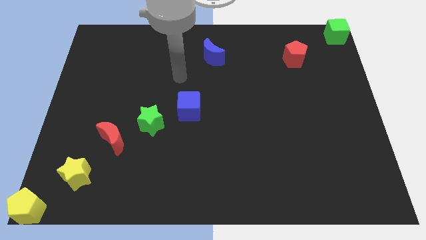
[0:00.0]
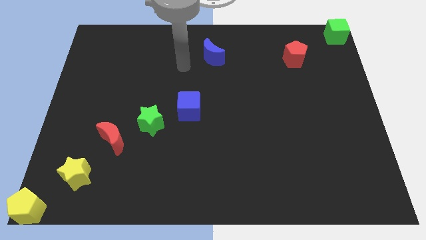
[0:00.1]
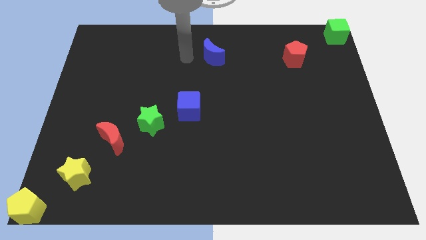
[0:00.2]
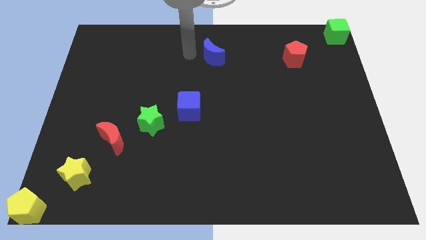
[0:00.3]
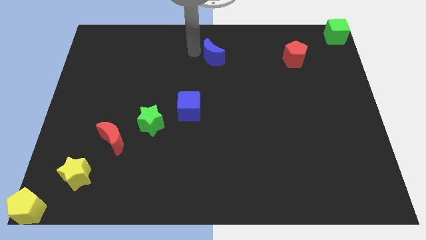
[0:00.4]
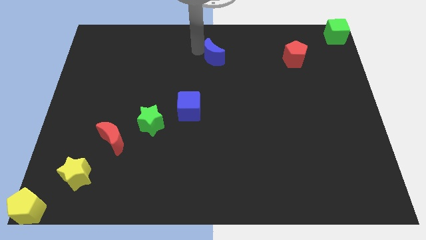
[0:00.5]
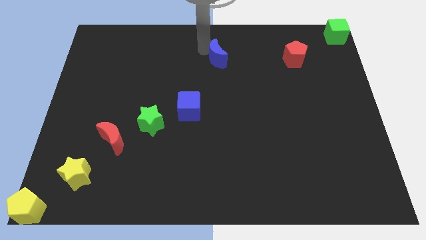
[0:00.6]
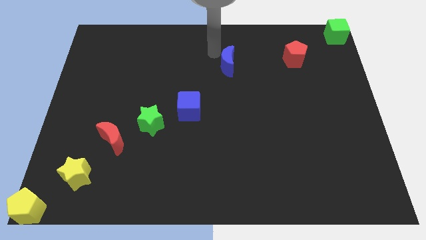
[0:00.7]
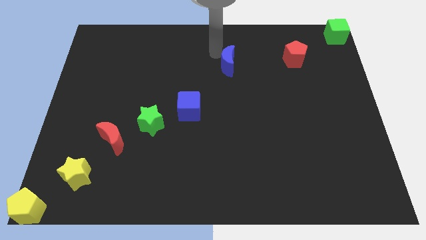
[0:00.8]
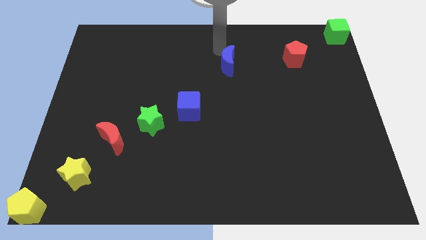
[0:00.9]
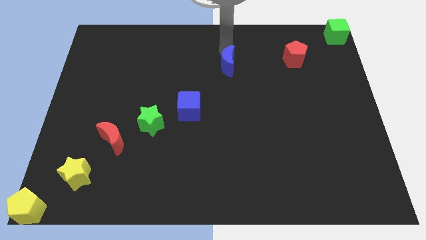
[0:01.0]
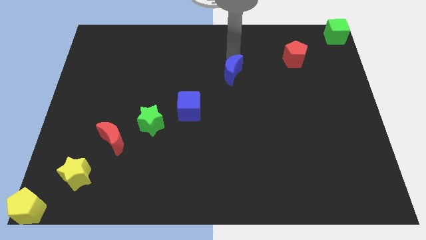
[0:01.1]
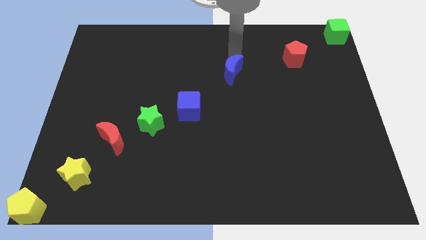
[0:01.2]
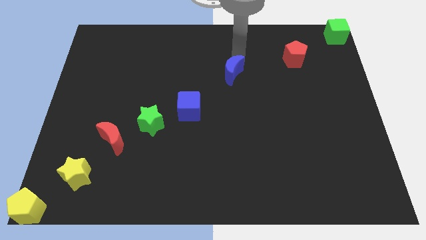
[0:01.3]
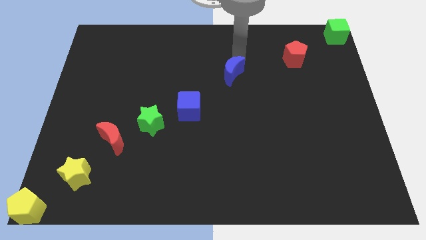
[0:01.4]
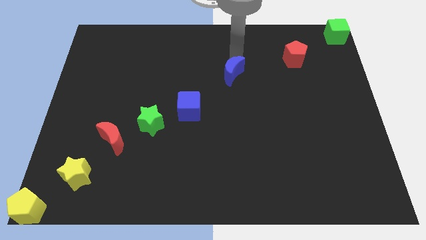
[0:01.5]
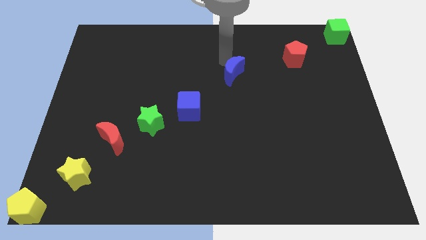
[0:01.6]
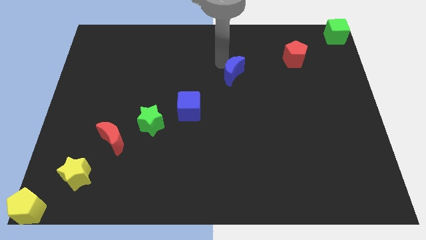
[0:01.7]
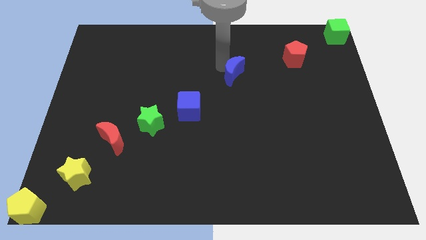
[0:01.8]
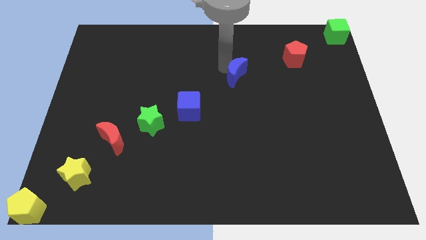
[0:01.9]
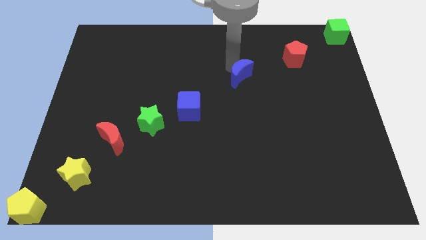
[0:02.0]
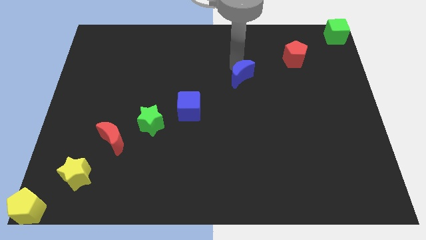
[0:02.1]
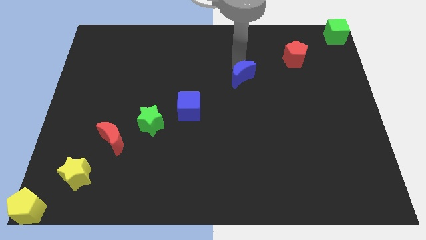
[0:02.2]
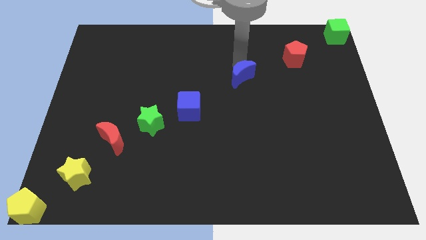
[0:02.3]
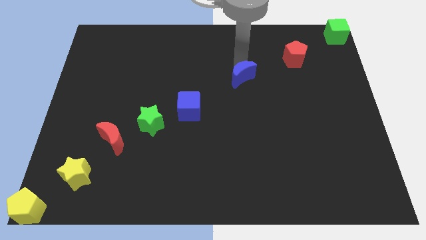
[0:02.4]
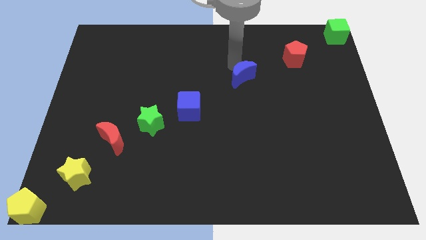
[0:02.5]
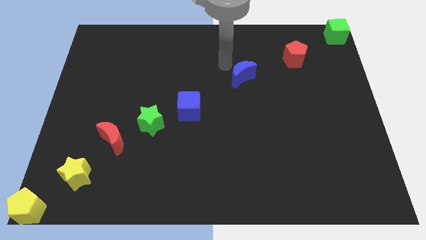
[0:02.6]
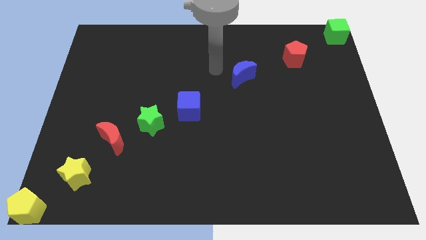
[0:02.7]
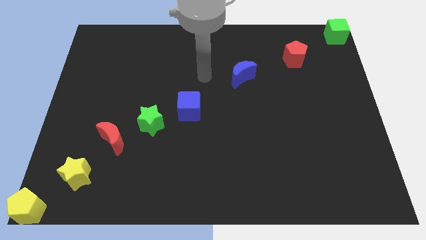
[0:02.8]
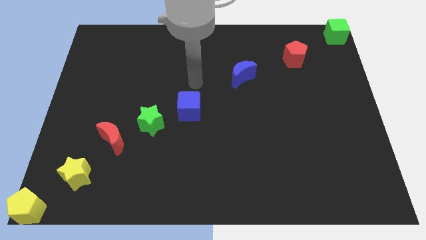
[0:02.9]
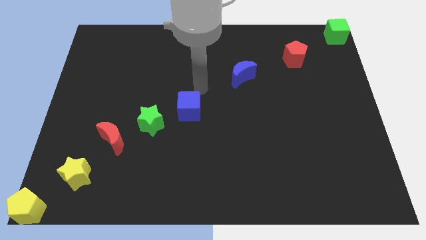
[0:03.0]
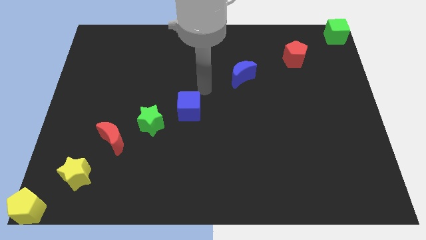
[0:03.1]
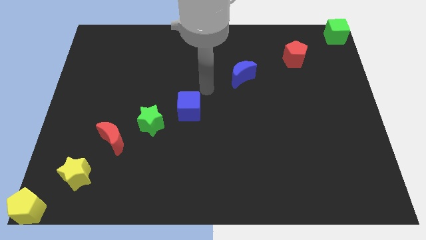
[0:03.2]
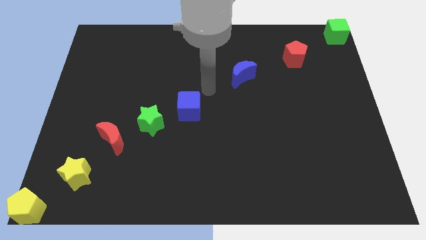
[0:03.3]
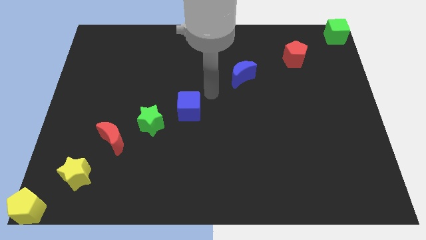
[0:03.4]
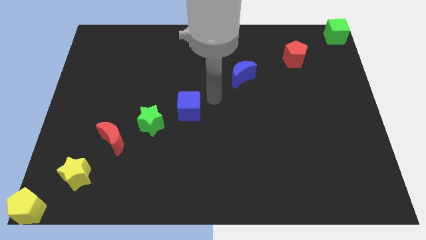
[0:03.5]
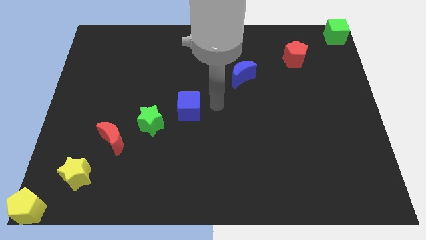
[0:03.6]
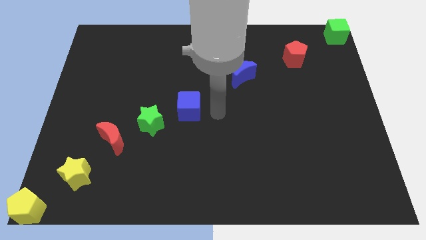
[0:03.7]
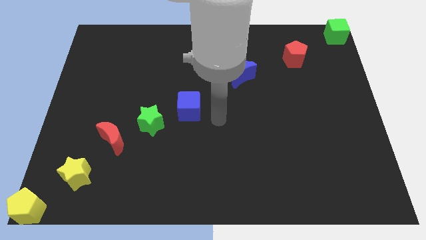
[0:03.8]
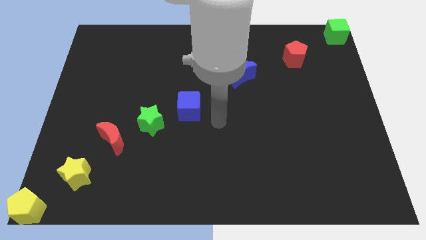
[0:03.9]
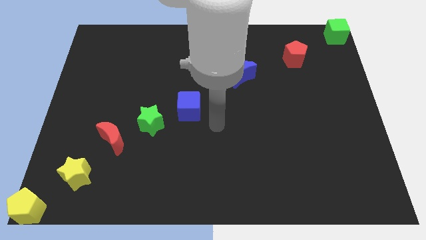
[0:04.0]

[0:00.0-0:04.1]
place the blue crescent diagonally in between the red pentagon and blue cube

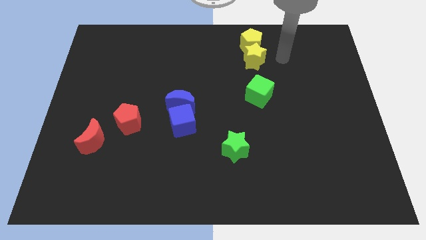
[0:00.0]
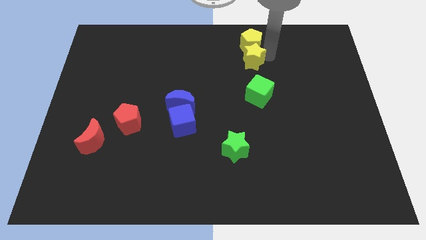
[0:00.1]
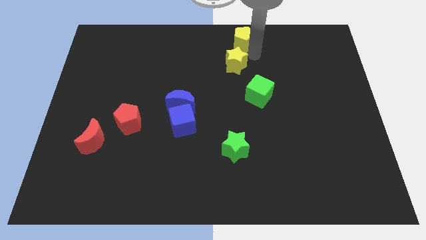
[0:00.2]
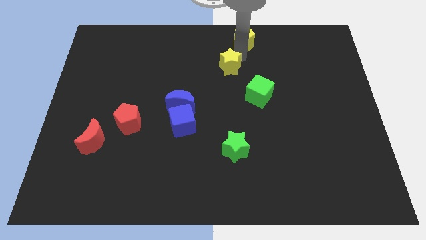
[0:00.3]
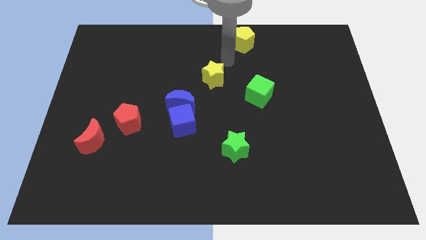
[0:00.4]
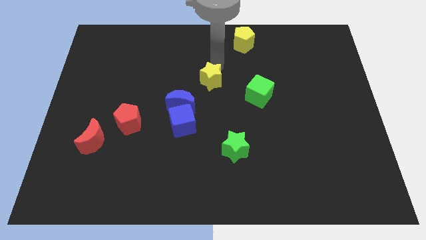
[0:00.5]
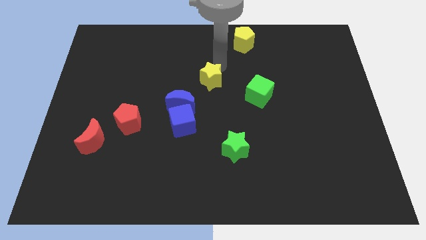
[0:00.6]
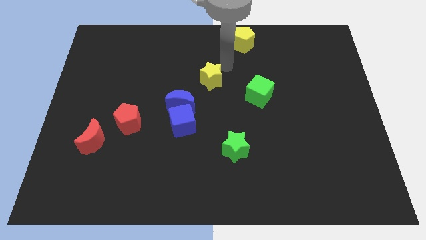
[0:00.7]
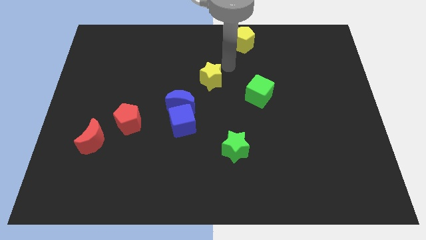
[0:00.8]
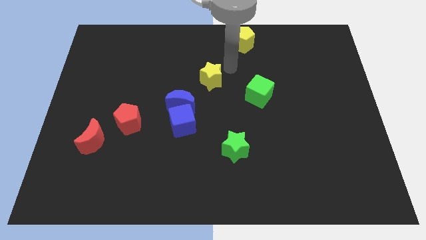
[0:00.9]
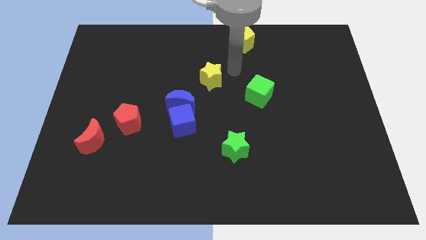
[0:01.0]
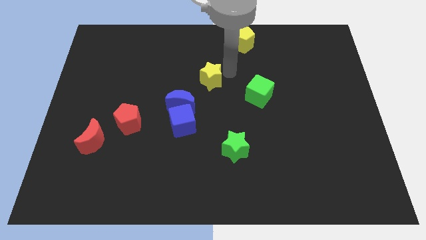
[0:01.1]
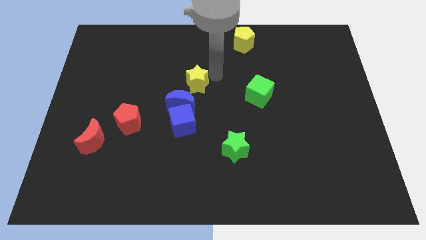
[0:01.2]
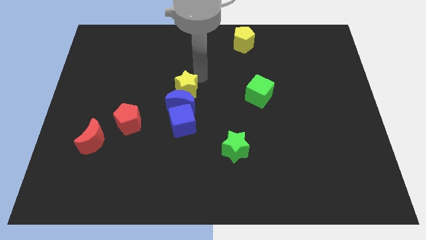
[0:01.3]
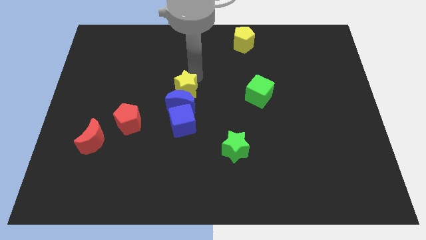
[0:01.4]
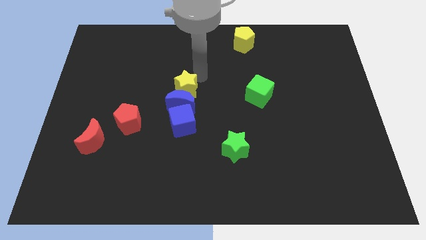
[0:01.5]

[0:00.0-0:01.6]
put the yellow star at the top of blue moon

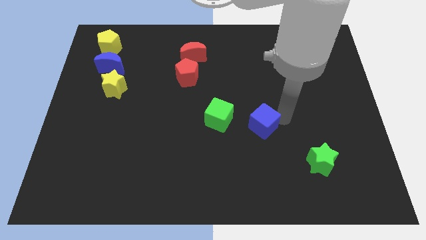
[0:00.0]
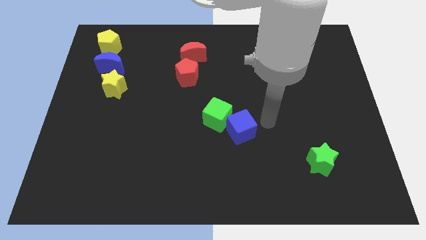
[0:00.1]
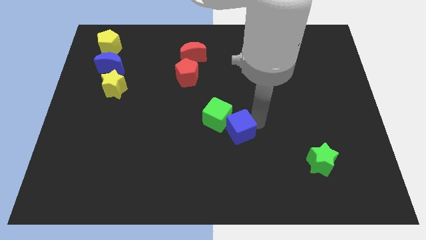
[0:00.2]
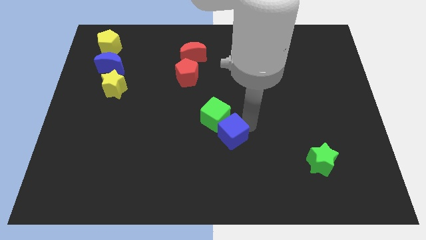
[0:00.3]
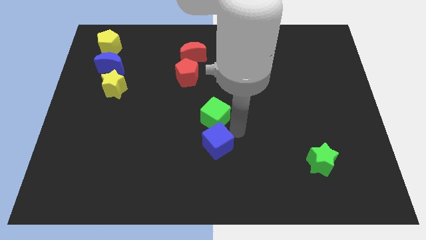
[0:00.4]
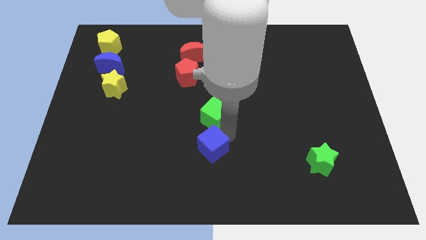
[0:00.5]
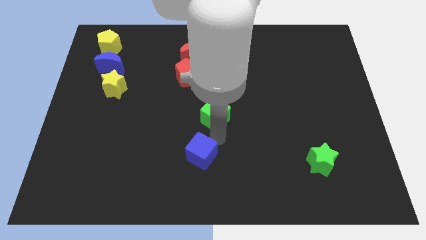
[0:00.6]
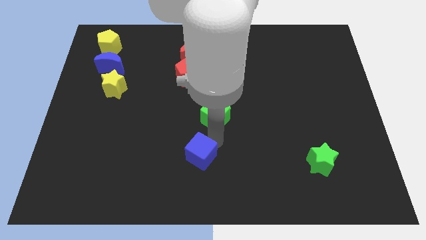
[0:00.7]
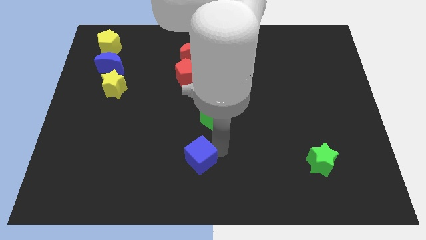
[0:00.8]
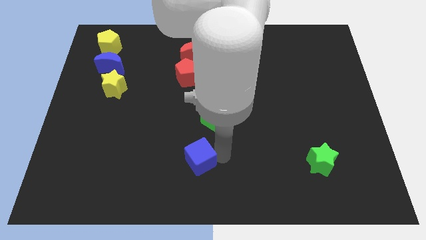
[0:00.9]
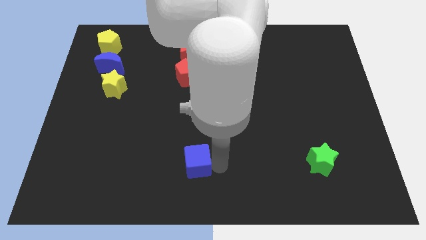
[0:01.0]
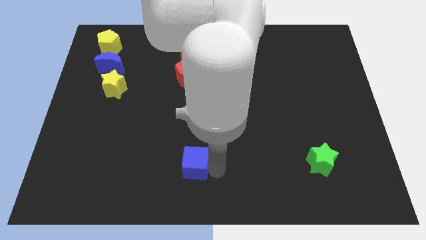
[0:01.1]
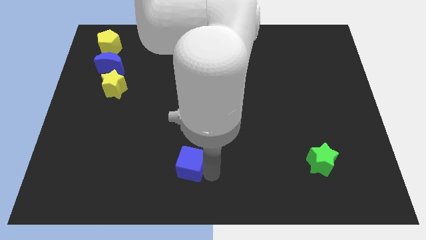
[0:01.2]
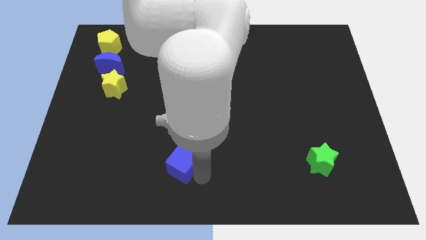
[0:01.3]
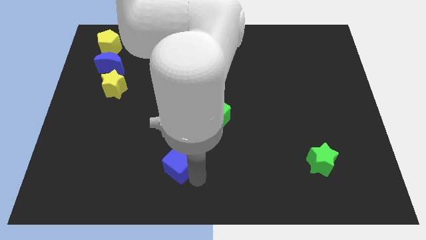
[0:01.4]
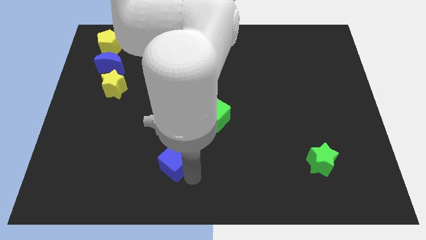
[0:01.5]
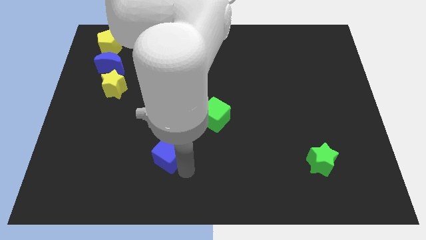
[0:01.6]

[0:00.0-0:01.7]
move the blue cube diagonally on the bottom left side of the green cube

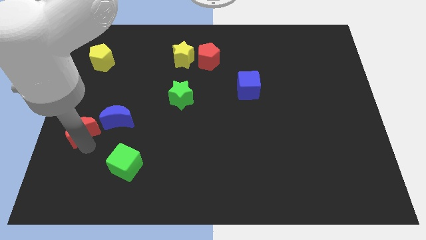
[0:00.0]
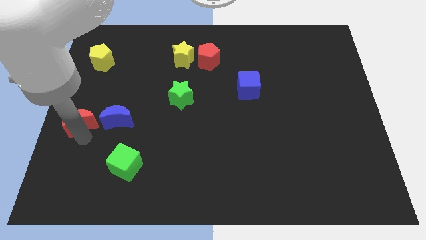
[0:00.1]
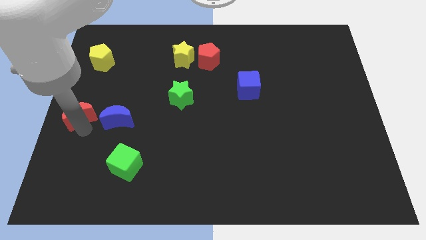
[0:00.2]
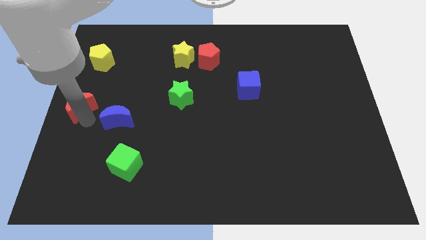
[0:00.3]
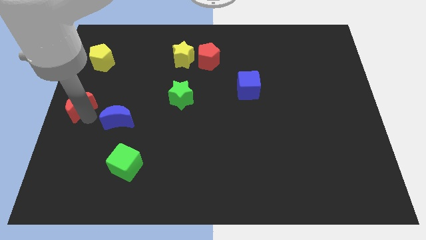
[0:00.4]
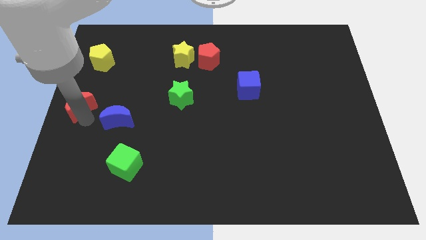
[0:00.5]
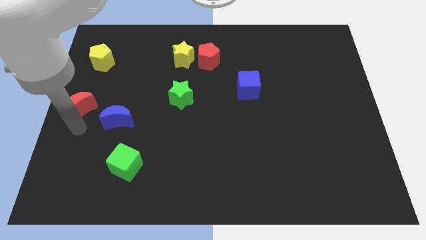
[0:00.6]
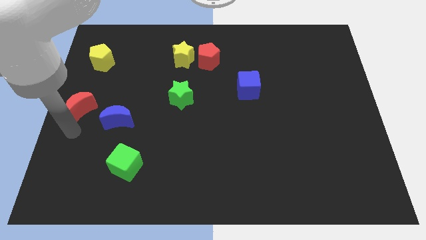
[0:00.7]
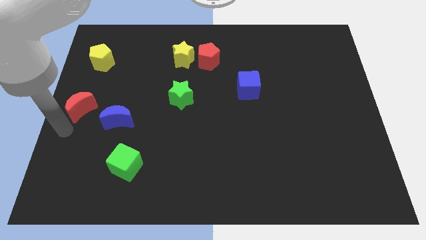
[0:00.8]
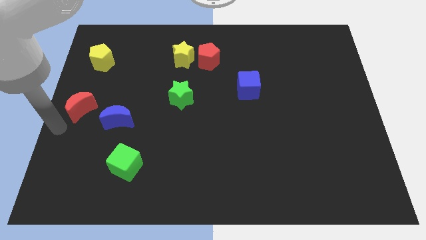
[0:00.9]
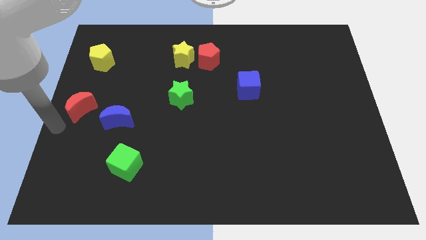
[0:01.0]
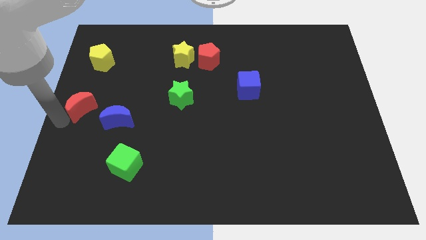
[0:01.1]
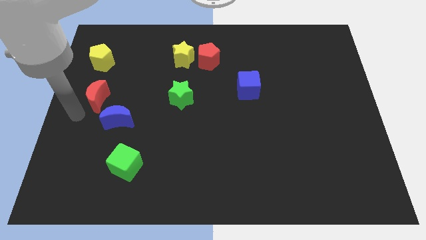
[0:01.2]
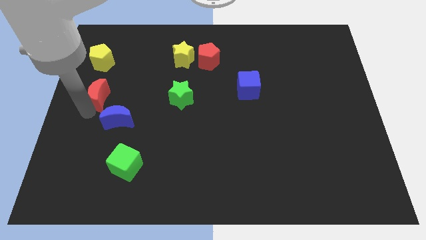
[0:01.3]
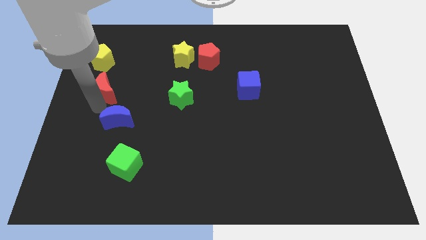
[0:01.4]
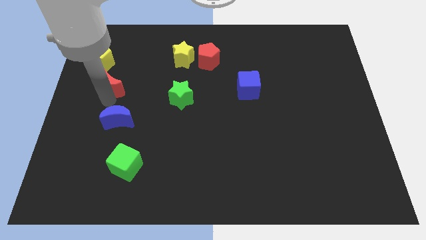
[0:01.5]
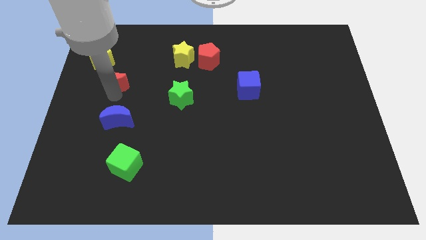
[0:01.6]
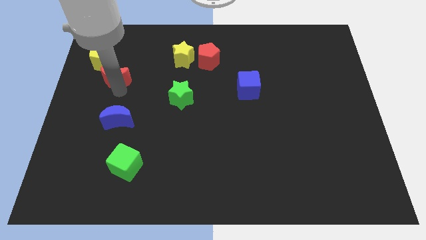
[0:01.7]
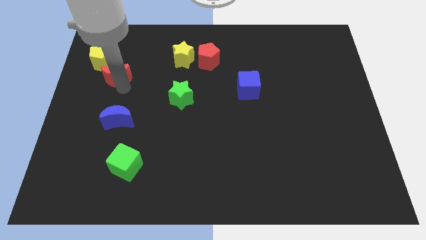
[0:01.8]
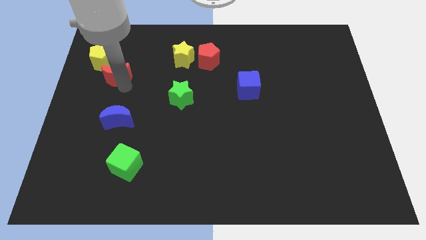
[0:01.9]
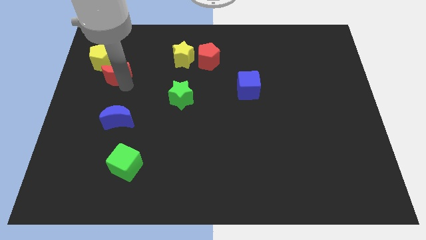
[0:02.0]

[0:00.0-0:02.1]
drag the red moon towards the yellow pentagon
